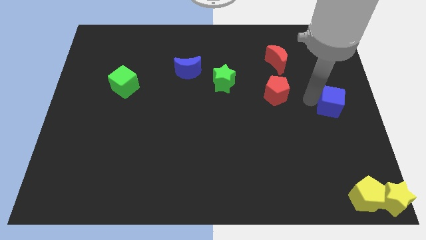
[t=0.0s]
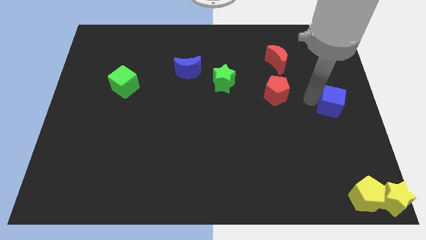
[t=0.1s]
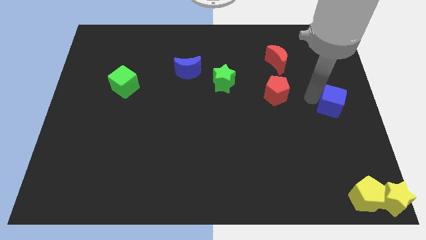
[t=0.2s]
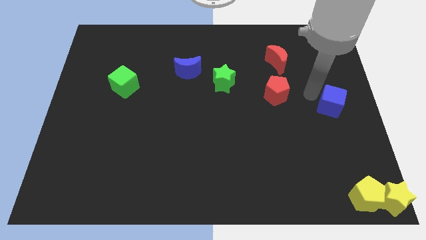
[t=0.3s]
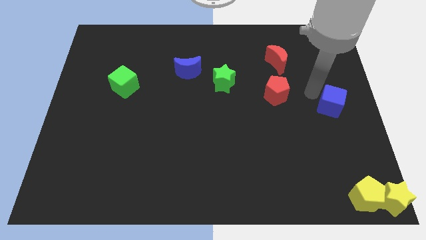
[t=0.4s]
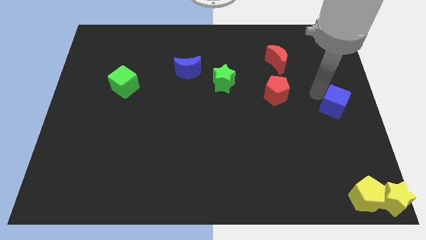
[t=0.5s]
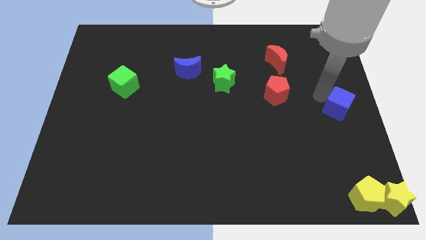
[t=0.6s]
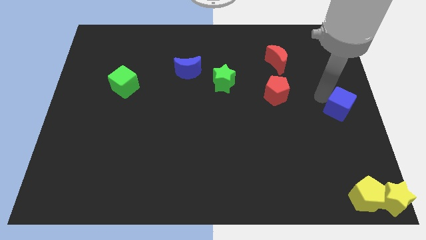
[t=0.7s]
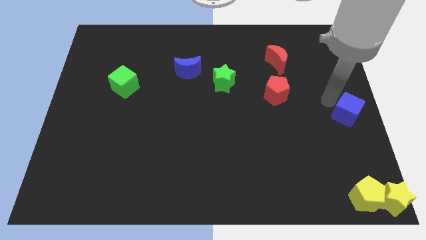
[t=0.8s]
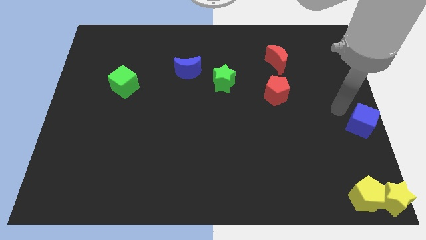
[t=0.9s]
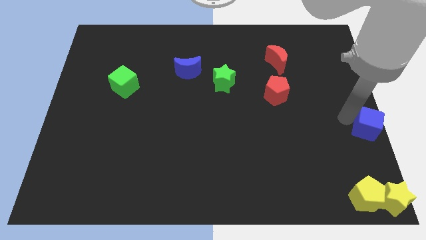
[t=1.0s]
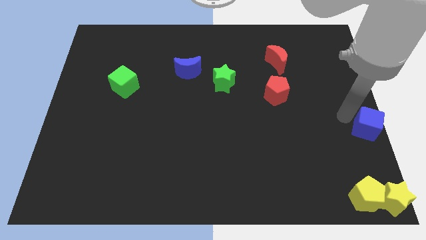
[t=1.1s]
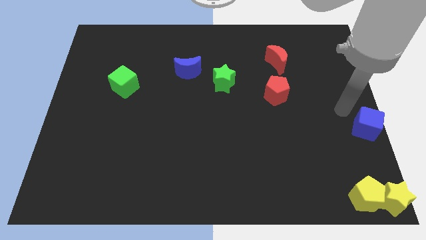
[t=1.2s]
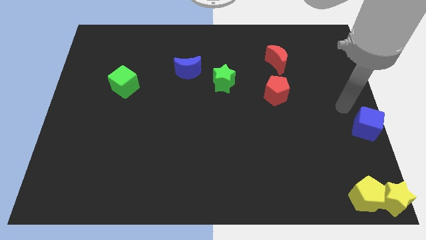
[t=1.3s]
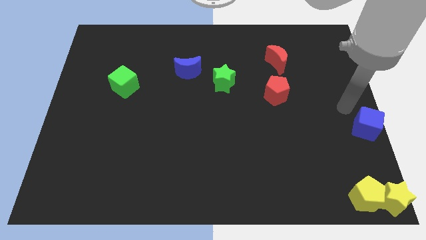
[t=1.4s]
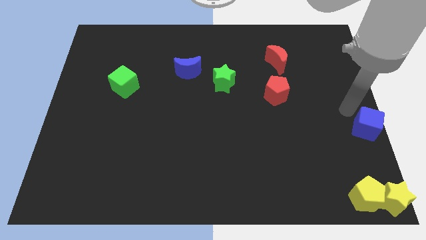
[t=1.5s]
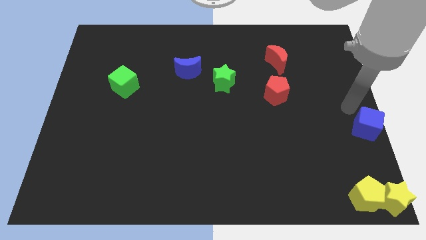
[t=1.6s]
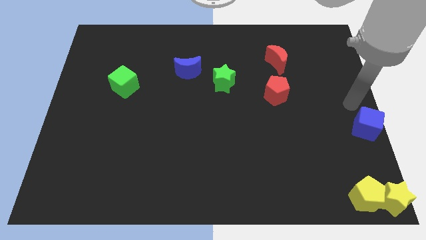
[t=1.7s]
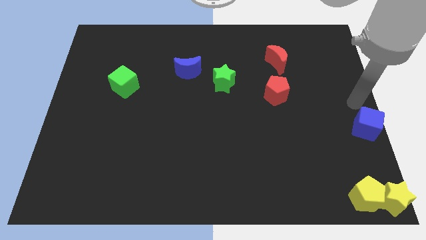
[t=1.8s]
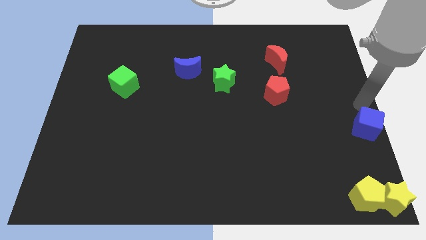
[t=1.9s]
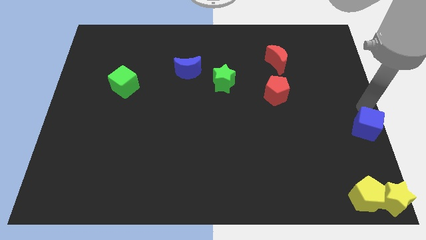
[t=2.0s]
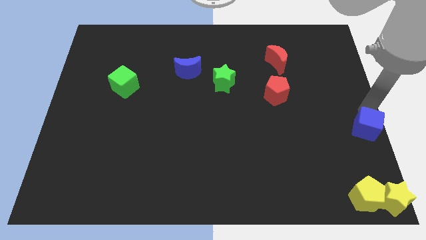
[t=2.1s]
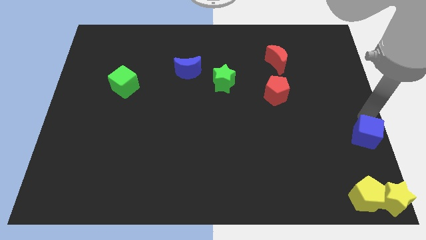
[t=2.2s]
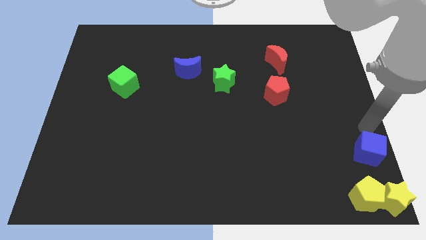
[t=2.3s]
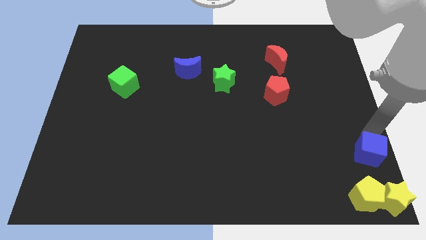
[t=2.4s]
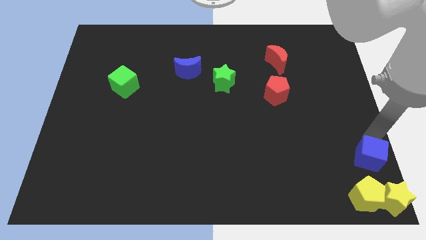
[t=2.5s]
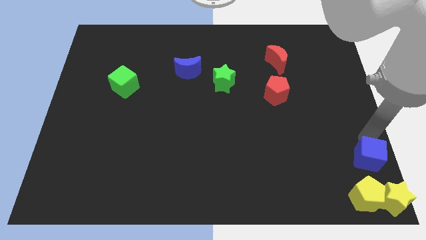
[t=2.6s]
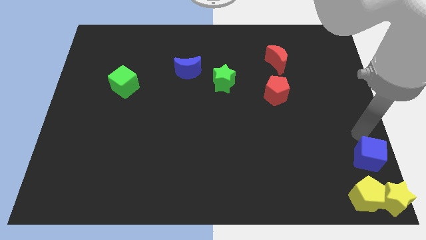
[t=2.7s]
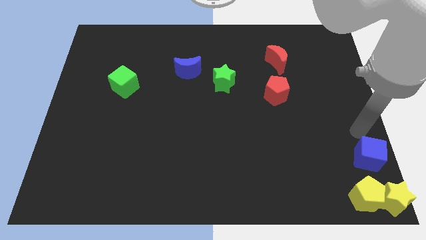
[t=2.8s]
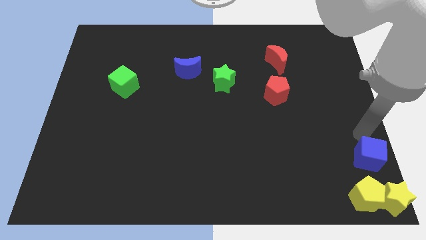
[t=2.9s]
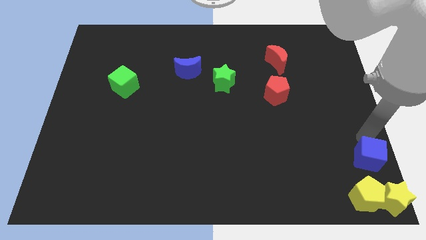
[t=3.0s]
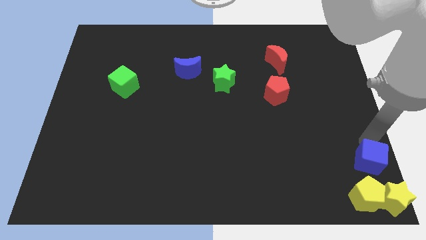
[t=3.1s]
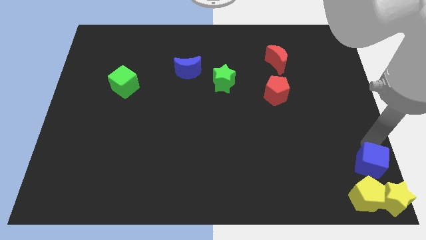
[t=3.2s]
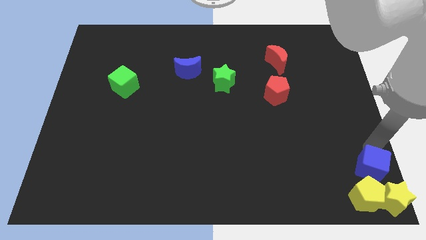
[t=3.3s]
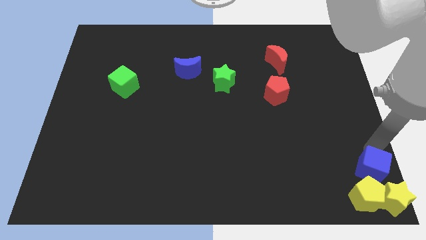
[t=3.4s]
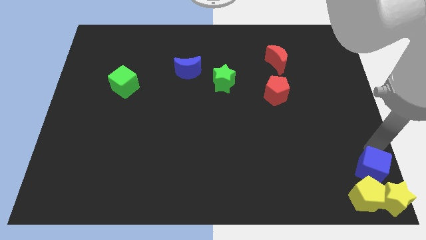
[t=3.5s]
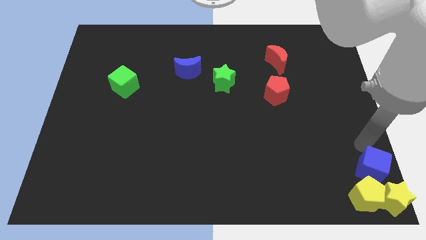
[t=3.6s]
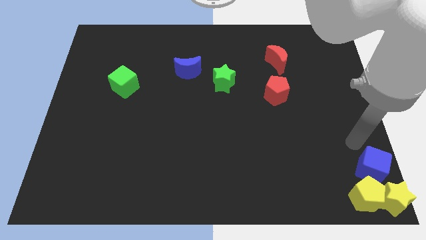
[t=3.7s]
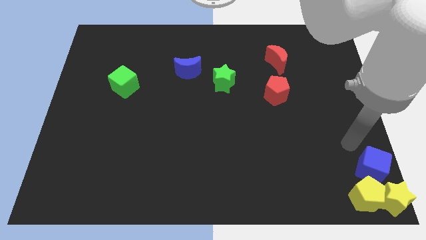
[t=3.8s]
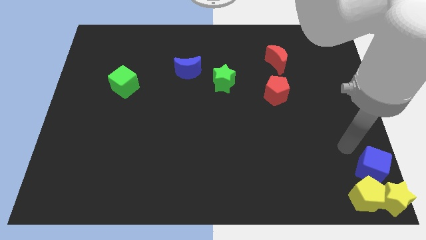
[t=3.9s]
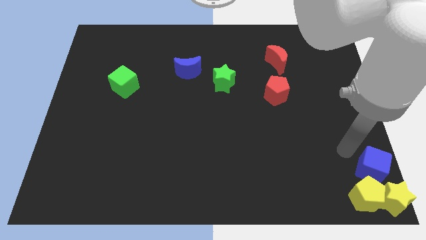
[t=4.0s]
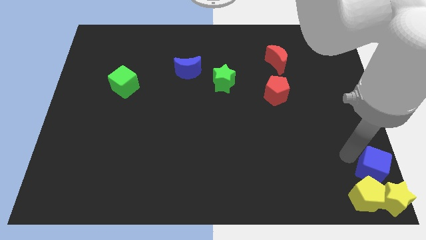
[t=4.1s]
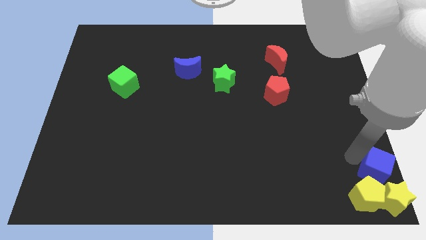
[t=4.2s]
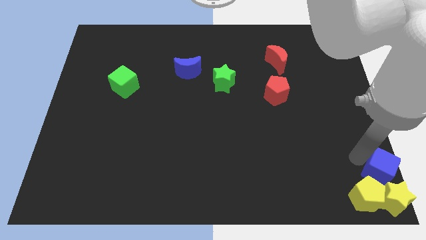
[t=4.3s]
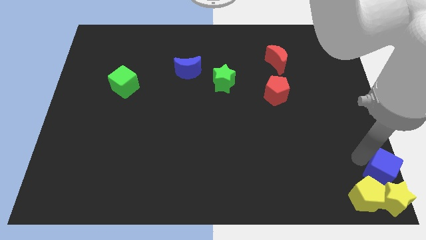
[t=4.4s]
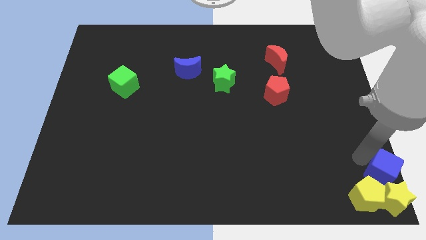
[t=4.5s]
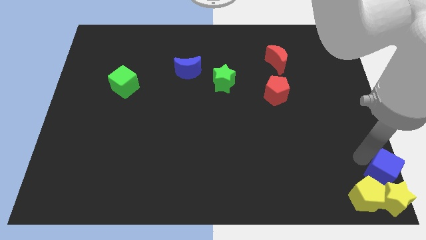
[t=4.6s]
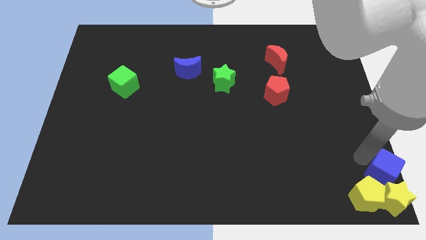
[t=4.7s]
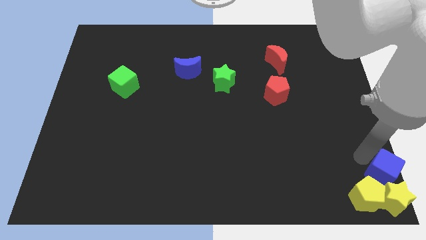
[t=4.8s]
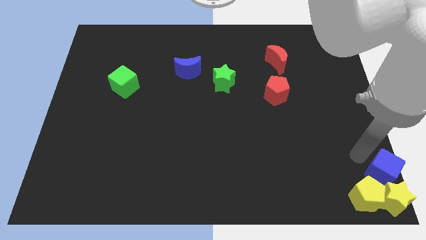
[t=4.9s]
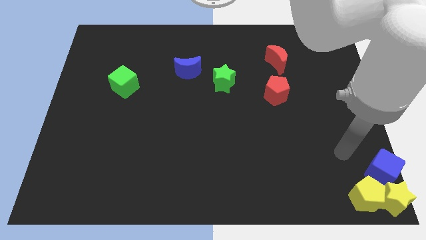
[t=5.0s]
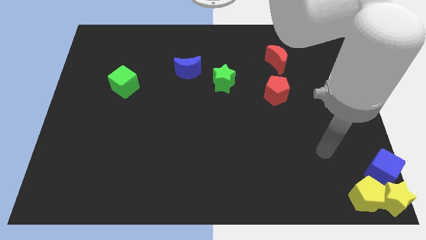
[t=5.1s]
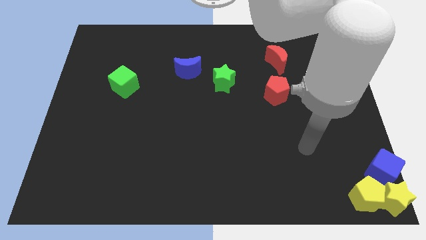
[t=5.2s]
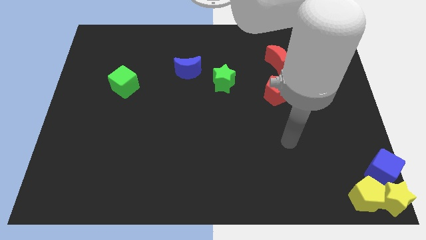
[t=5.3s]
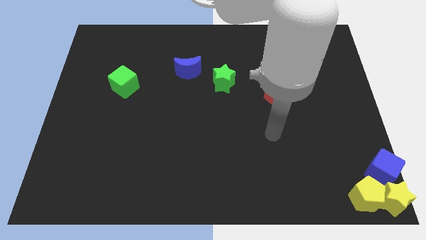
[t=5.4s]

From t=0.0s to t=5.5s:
move the blue cube above the yellow blocks

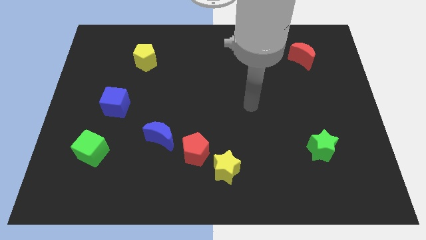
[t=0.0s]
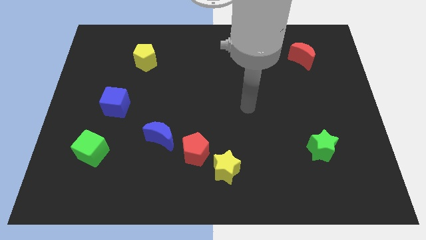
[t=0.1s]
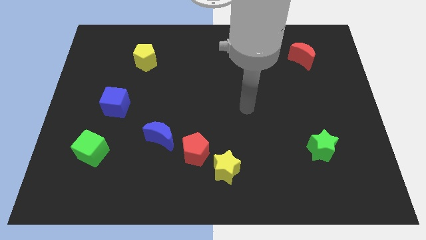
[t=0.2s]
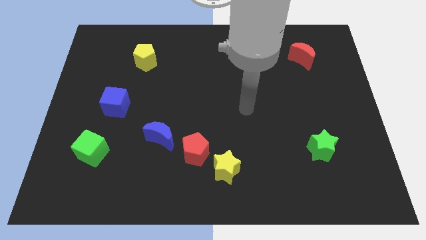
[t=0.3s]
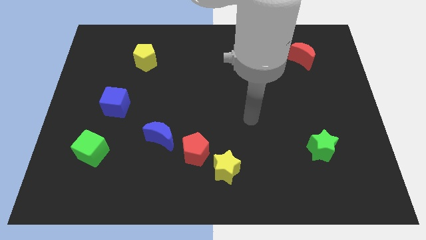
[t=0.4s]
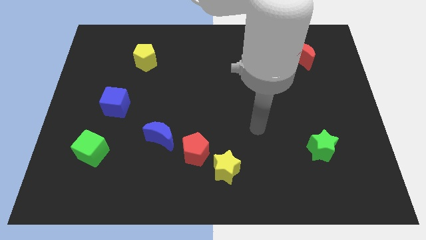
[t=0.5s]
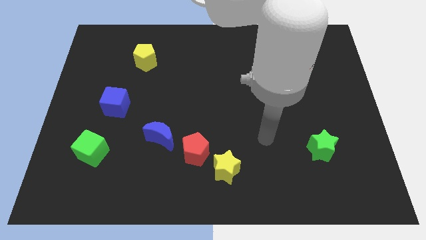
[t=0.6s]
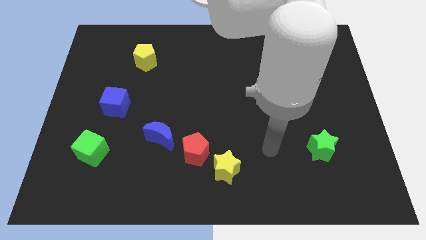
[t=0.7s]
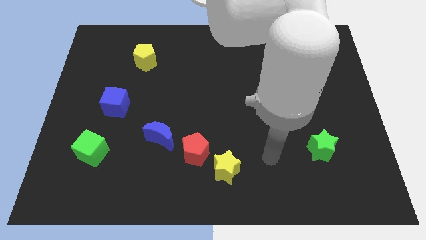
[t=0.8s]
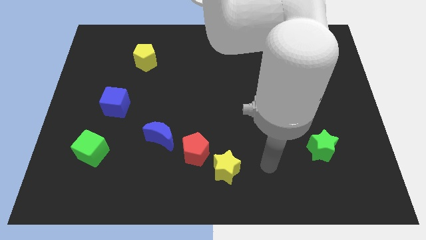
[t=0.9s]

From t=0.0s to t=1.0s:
place arm between stars

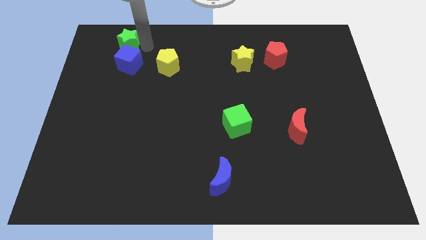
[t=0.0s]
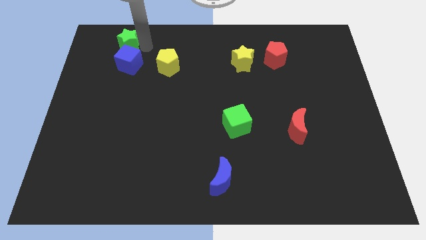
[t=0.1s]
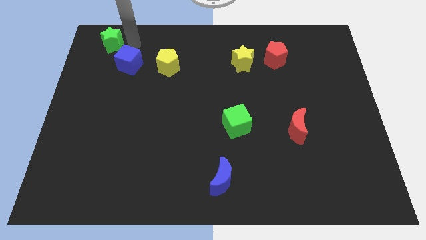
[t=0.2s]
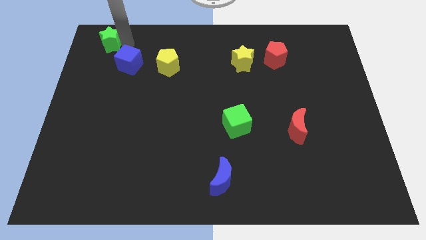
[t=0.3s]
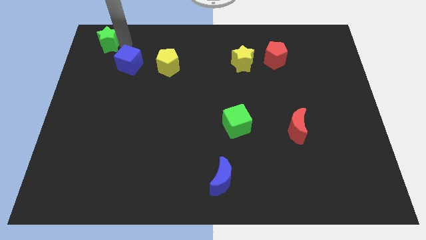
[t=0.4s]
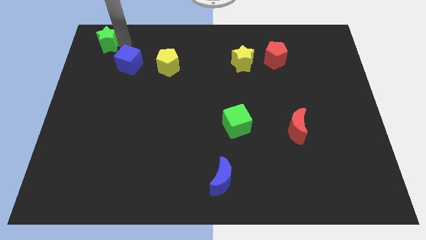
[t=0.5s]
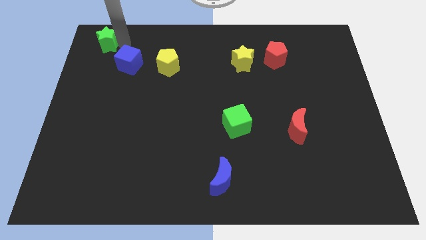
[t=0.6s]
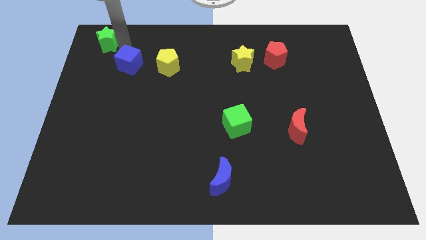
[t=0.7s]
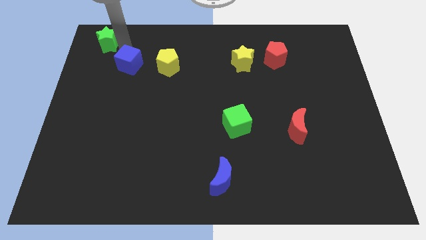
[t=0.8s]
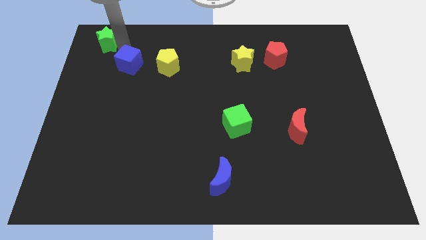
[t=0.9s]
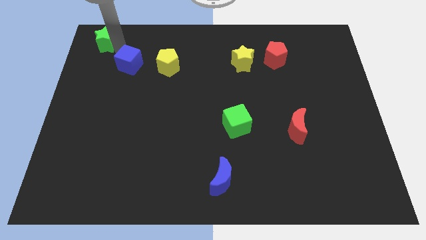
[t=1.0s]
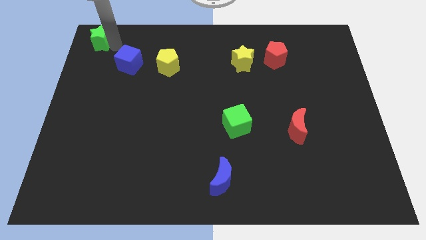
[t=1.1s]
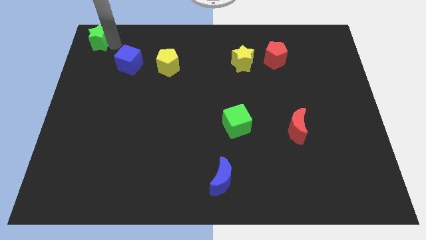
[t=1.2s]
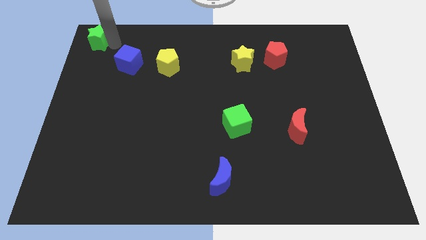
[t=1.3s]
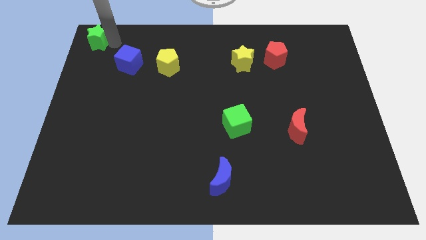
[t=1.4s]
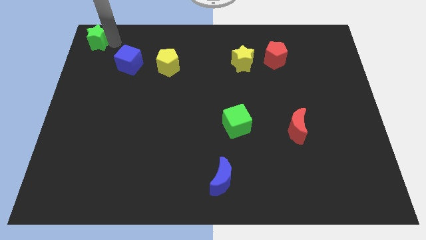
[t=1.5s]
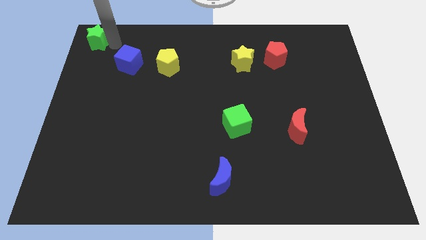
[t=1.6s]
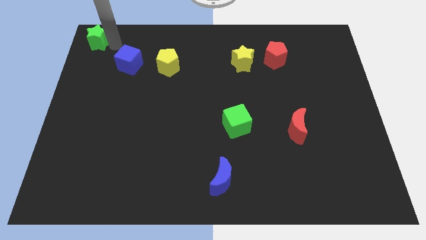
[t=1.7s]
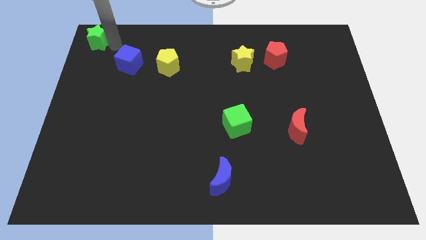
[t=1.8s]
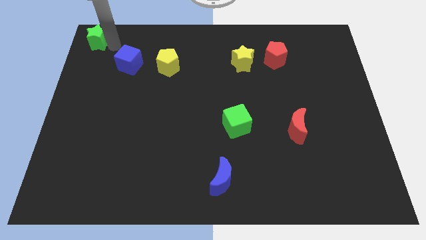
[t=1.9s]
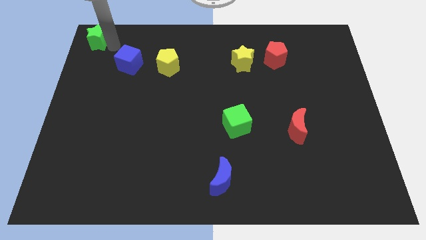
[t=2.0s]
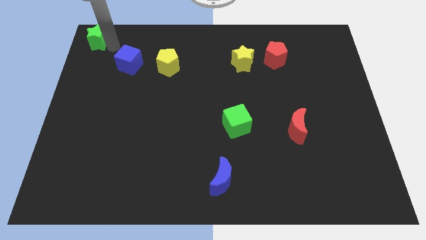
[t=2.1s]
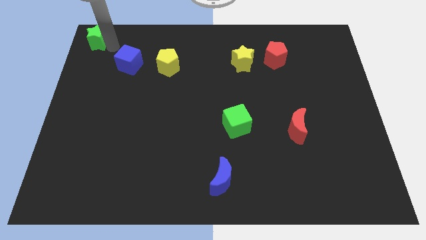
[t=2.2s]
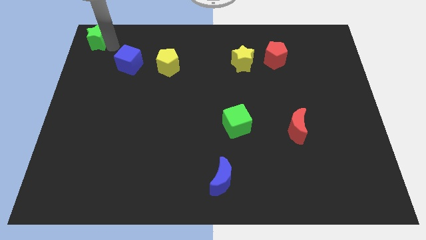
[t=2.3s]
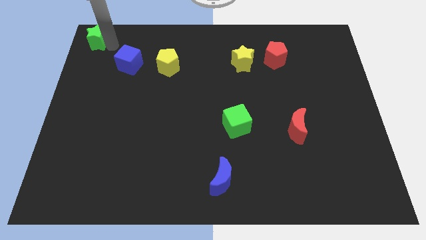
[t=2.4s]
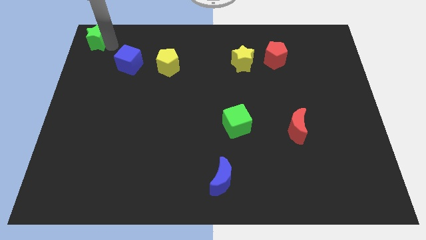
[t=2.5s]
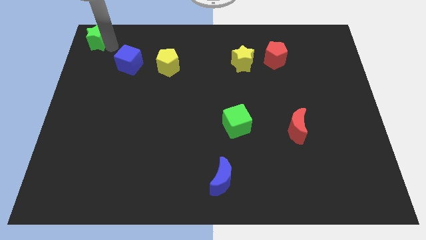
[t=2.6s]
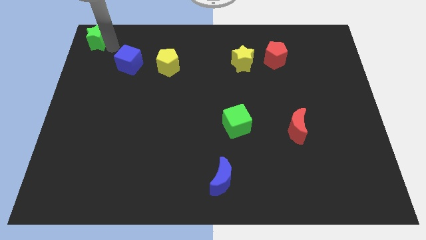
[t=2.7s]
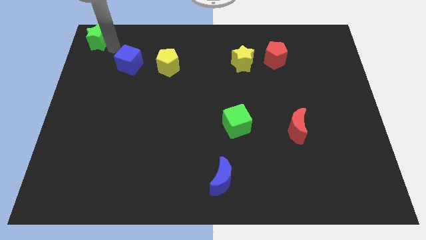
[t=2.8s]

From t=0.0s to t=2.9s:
move the green star to the top left corner
